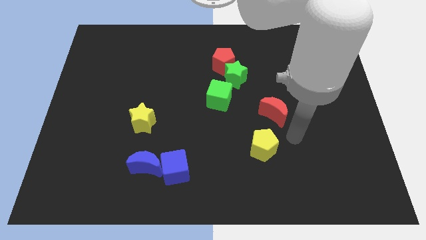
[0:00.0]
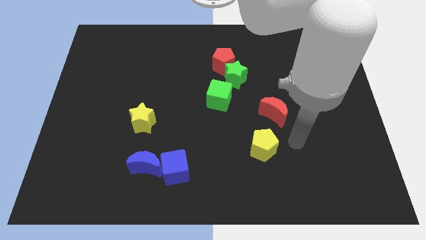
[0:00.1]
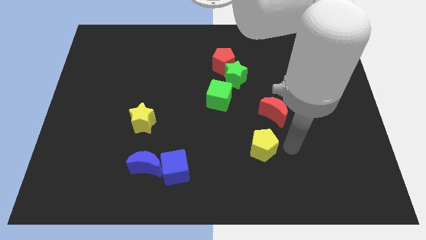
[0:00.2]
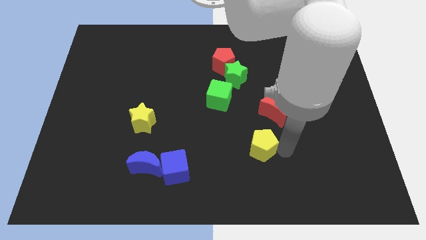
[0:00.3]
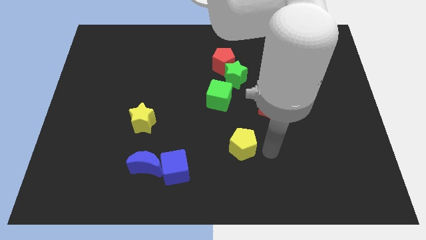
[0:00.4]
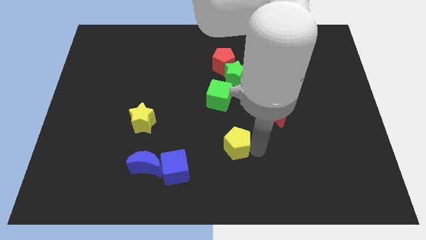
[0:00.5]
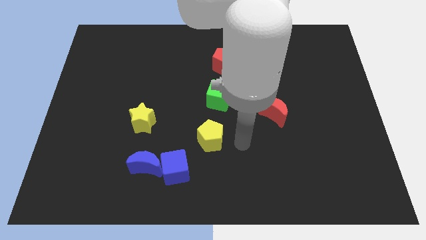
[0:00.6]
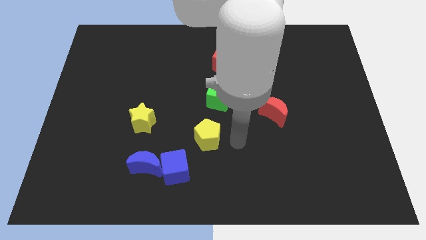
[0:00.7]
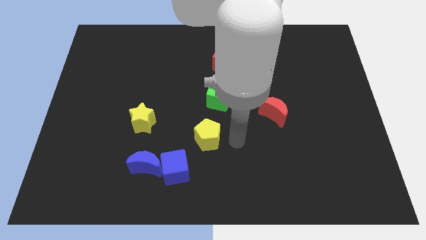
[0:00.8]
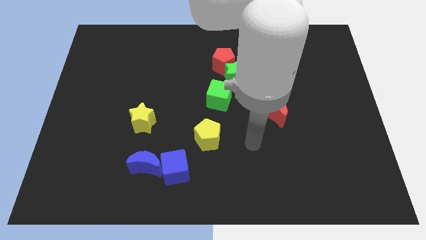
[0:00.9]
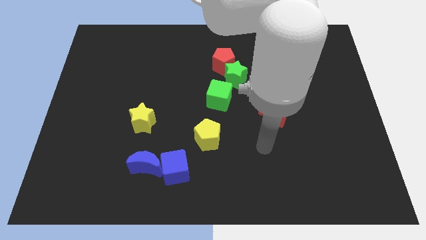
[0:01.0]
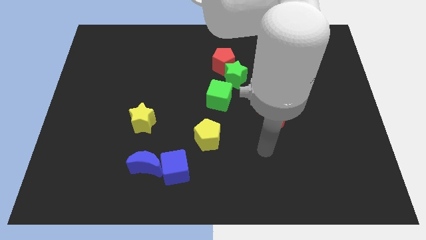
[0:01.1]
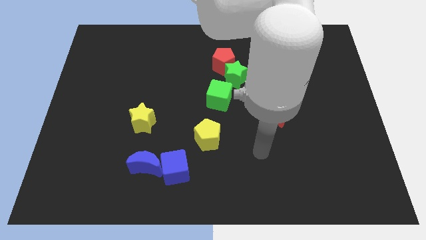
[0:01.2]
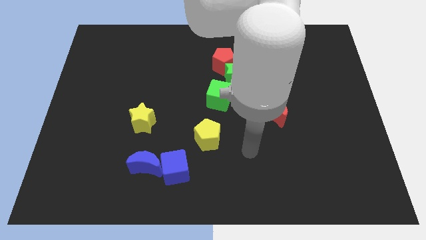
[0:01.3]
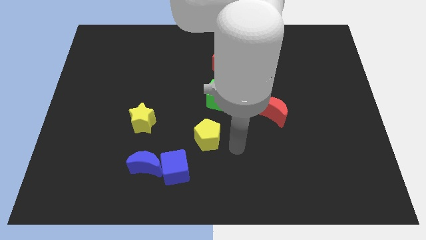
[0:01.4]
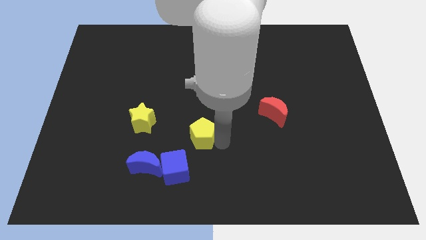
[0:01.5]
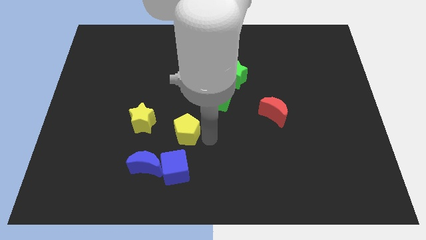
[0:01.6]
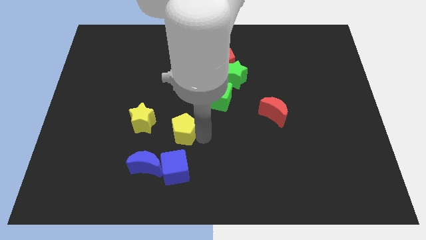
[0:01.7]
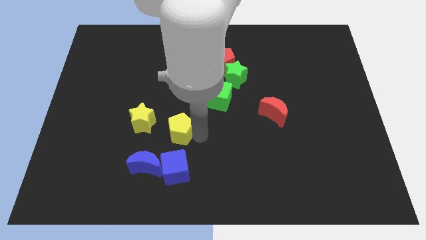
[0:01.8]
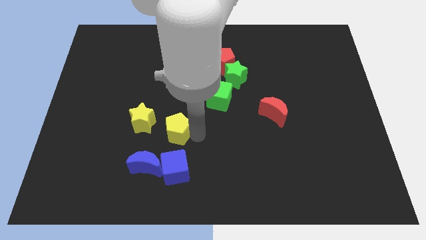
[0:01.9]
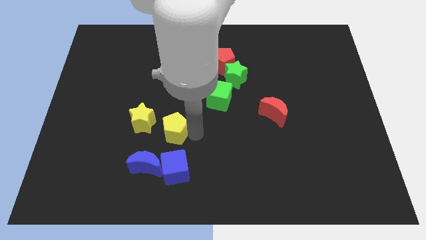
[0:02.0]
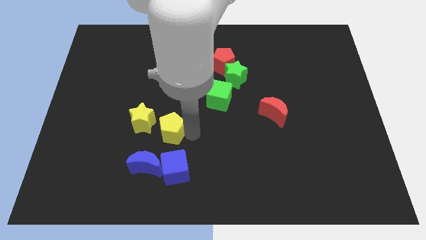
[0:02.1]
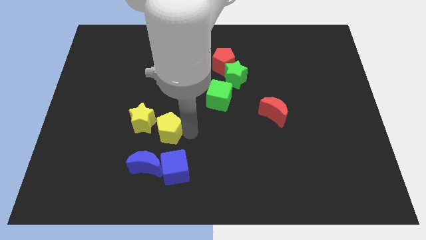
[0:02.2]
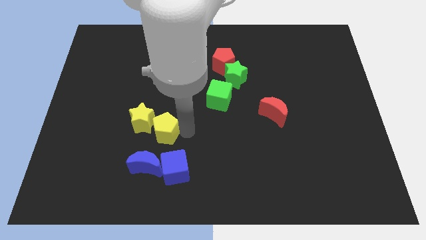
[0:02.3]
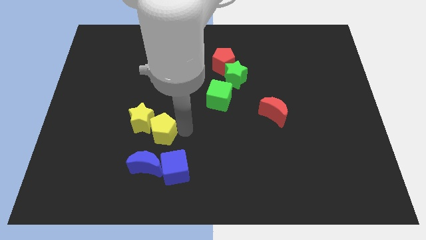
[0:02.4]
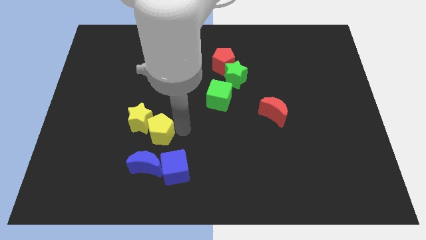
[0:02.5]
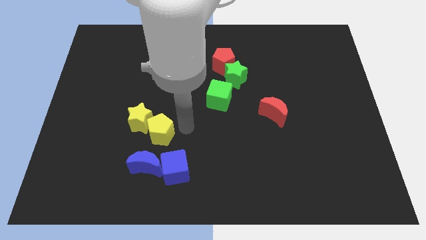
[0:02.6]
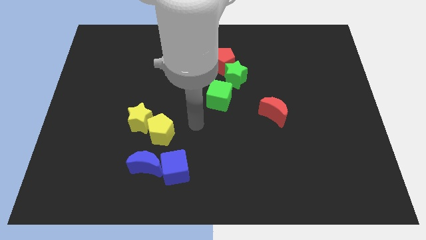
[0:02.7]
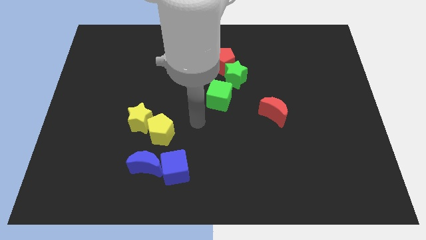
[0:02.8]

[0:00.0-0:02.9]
push the yellow pentagon into the yellow star

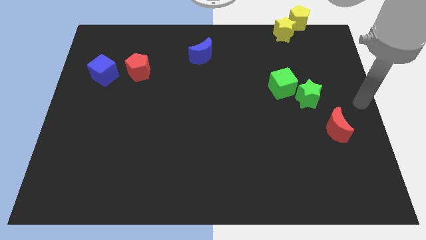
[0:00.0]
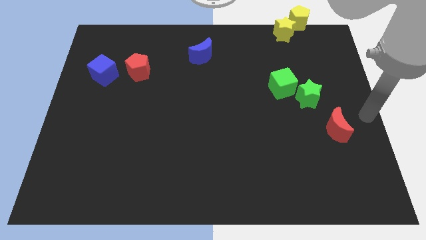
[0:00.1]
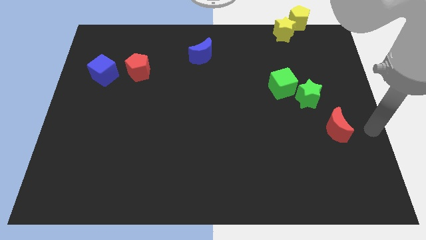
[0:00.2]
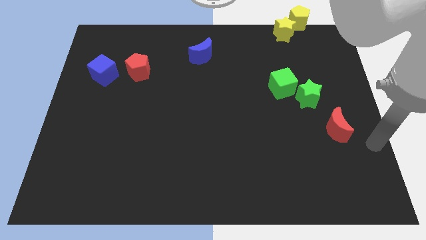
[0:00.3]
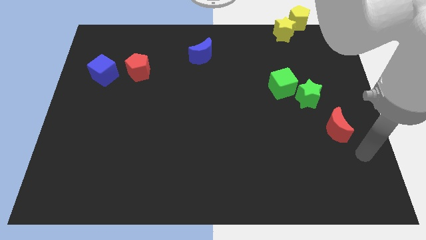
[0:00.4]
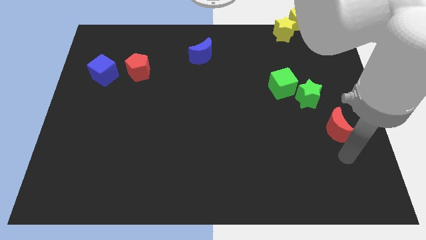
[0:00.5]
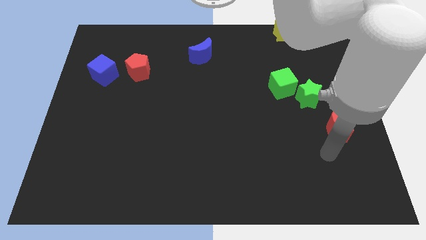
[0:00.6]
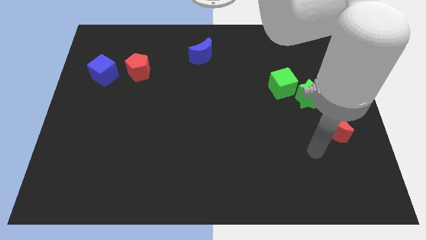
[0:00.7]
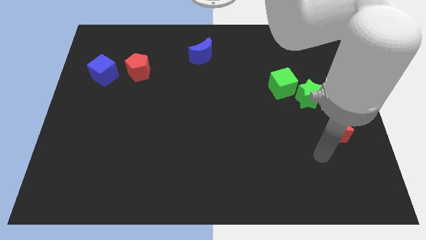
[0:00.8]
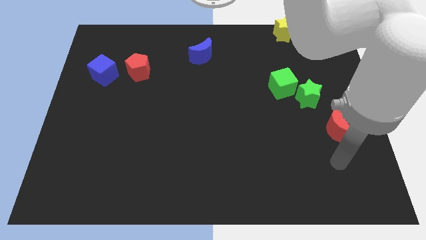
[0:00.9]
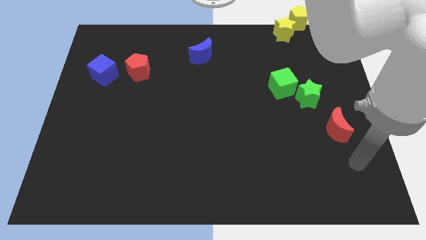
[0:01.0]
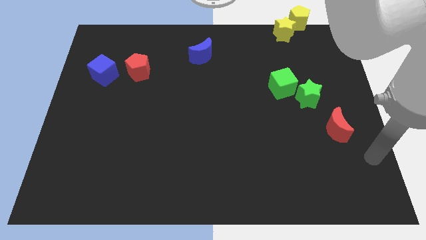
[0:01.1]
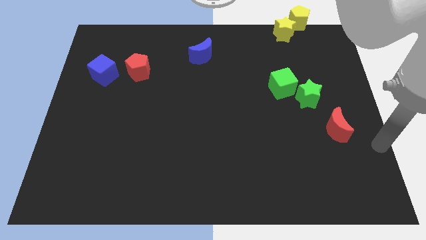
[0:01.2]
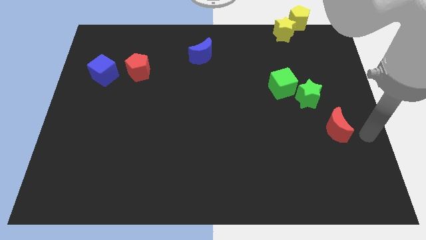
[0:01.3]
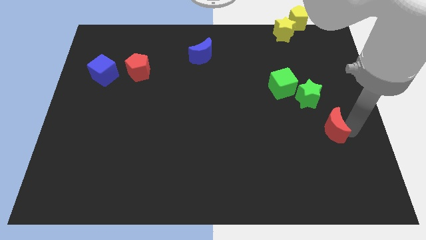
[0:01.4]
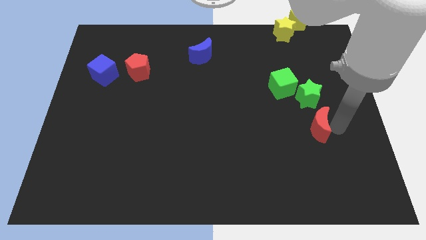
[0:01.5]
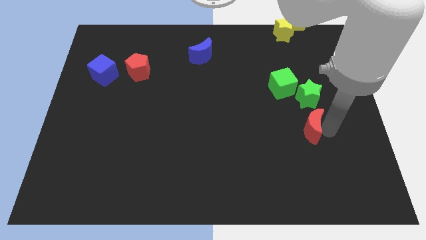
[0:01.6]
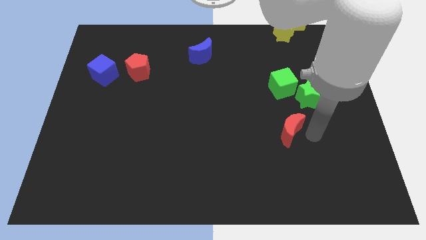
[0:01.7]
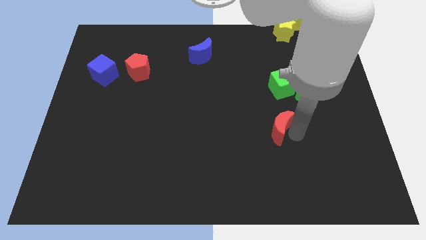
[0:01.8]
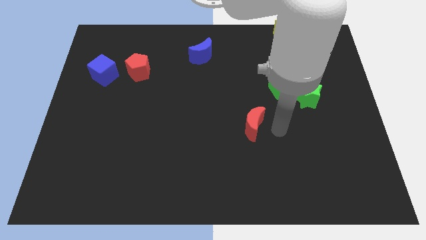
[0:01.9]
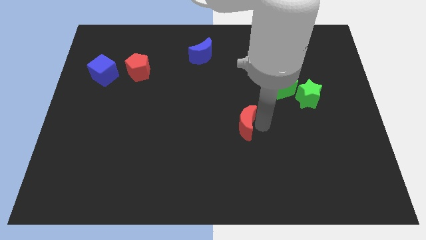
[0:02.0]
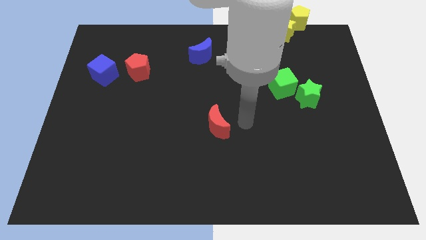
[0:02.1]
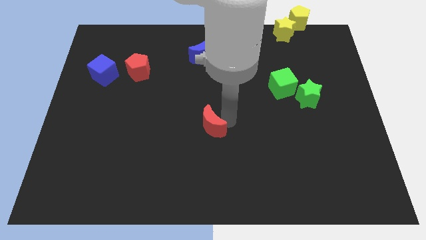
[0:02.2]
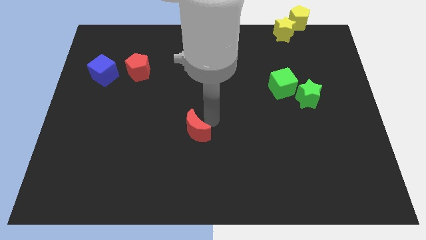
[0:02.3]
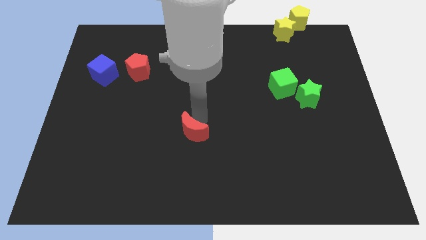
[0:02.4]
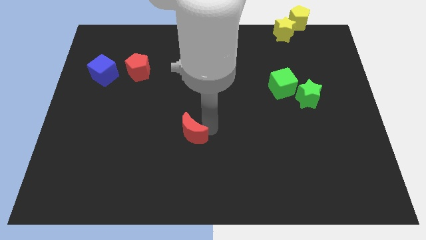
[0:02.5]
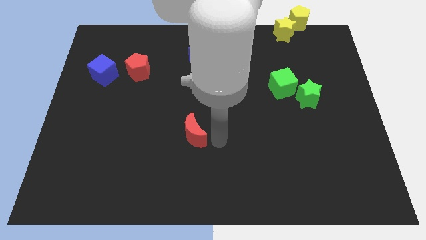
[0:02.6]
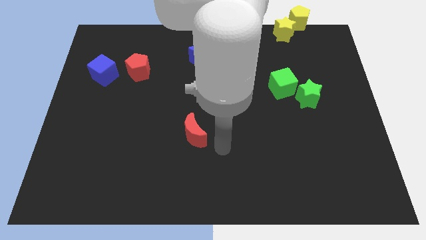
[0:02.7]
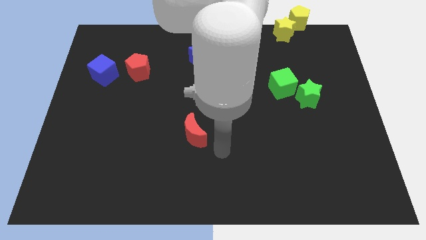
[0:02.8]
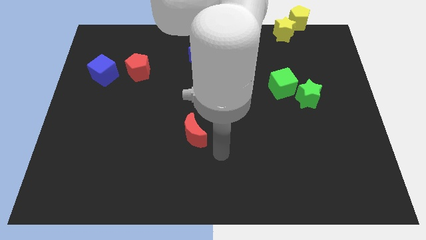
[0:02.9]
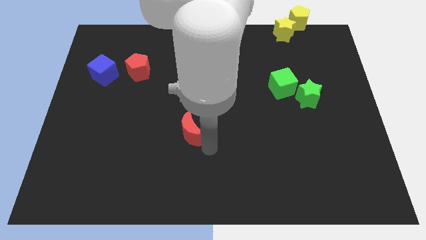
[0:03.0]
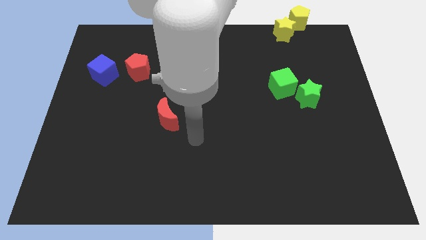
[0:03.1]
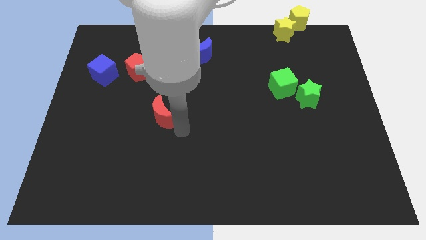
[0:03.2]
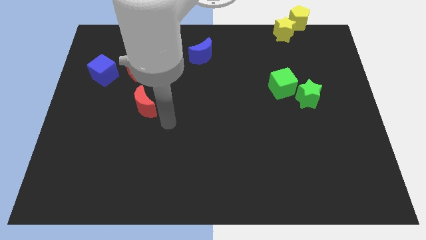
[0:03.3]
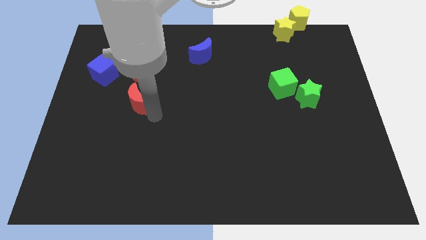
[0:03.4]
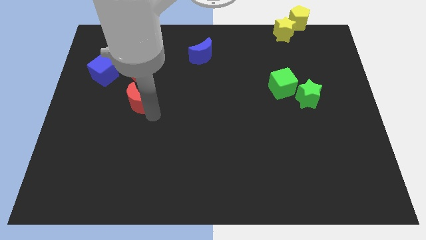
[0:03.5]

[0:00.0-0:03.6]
push the red crescent to the bottom of the red pentagon

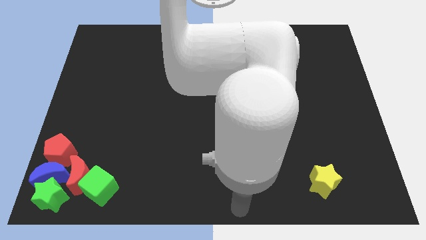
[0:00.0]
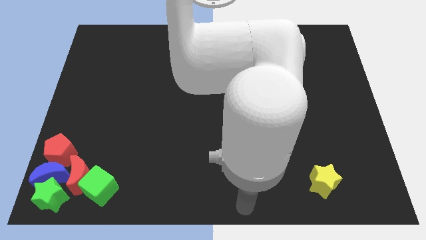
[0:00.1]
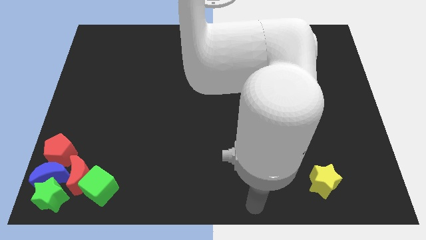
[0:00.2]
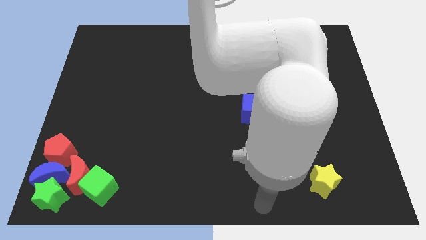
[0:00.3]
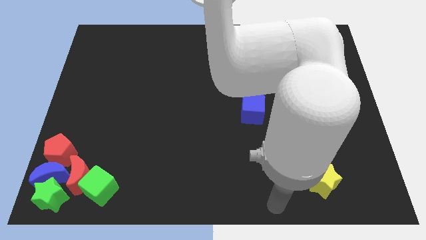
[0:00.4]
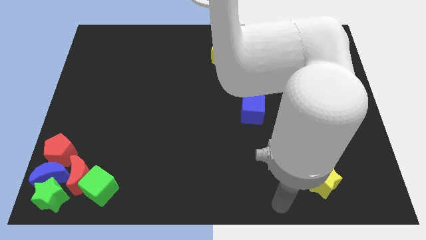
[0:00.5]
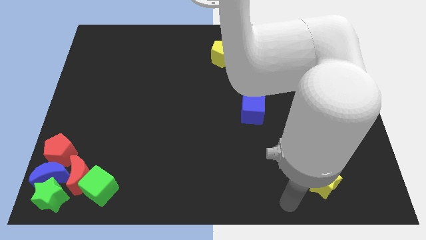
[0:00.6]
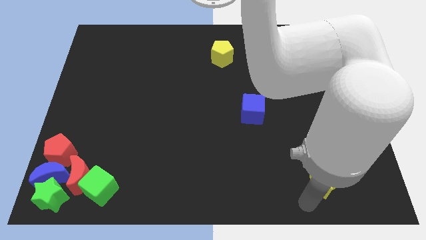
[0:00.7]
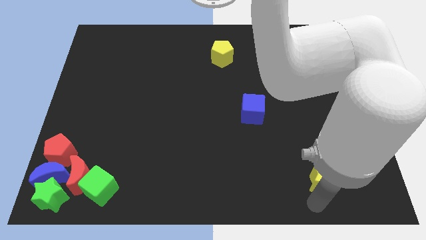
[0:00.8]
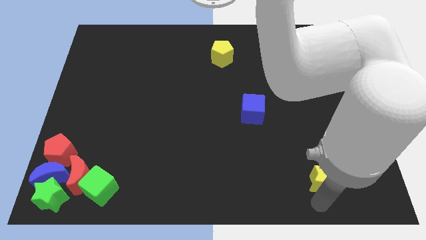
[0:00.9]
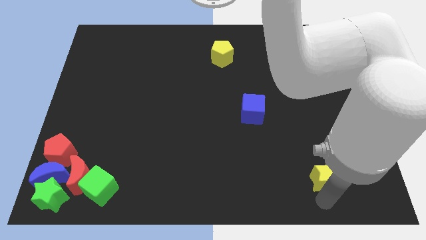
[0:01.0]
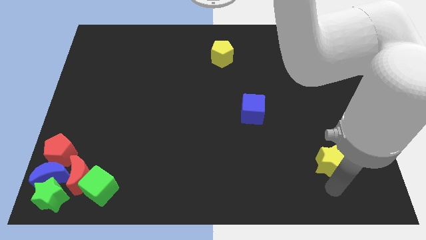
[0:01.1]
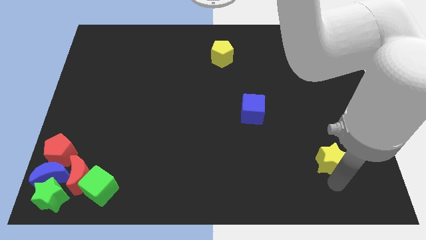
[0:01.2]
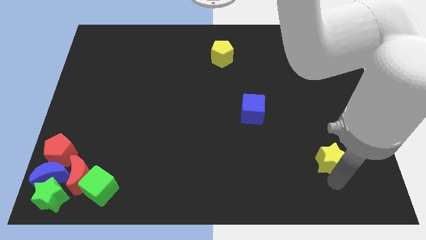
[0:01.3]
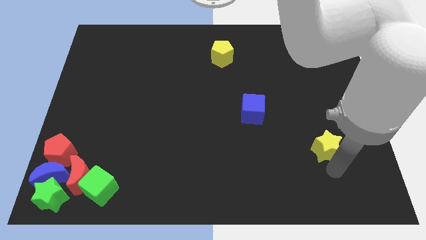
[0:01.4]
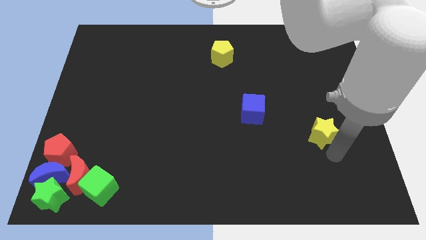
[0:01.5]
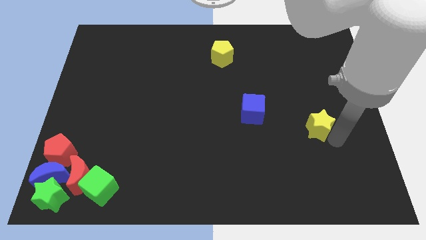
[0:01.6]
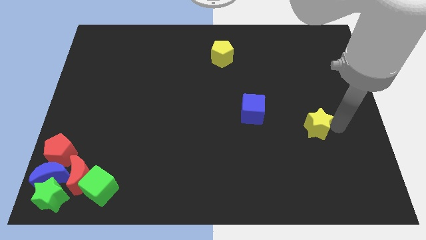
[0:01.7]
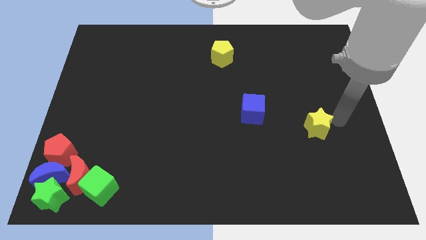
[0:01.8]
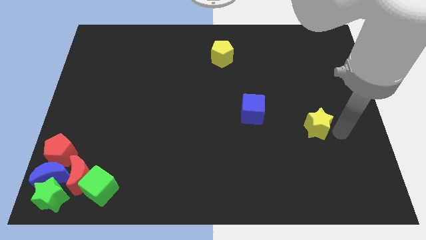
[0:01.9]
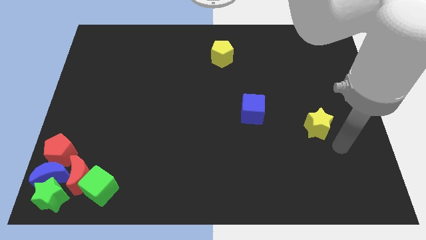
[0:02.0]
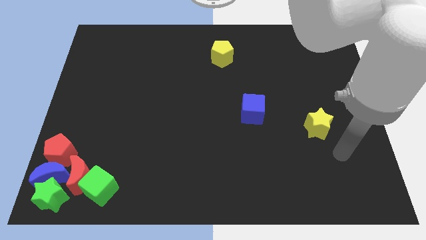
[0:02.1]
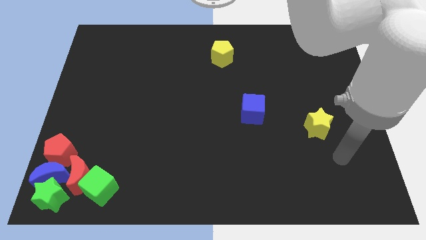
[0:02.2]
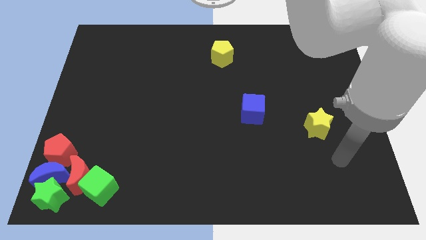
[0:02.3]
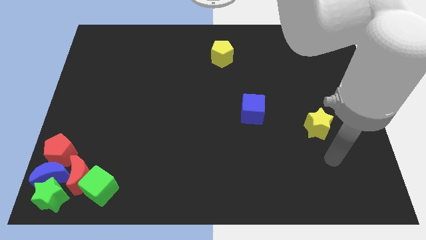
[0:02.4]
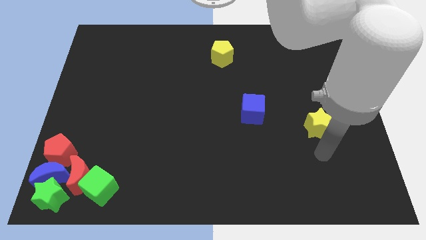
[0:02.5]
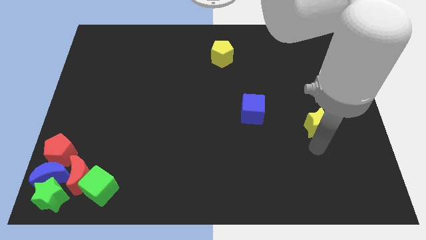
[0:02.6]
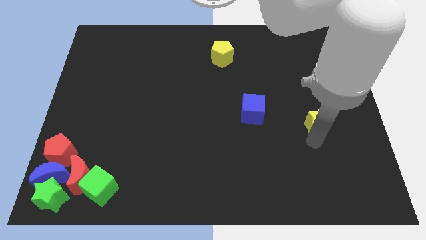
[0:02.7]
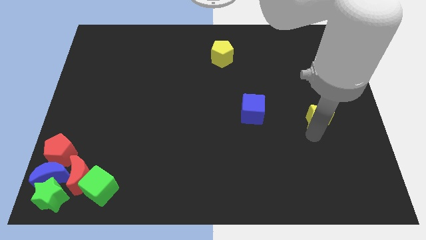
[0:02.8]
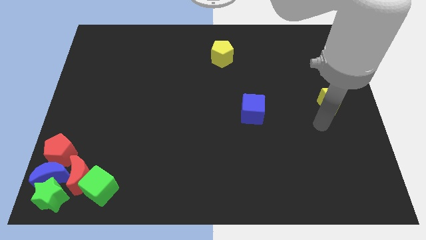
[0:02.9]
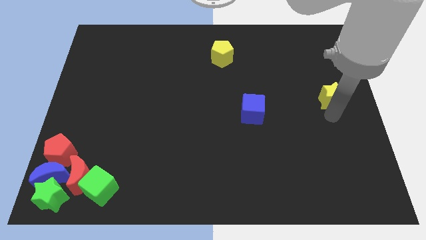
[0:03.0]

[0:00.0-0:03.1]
place yellow star parallel to blue cube
